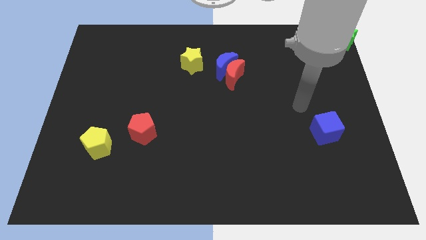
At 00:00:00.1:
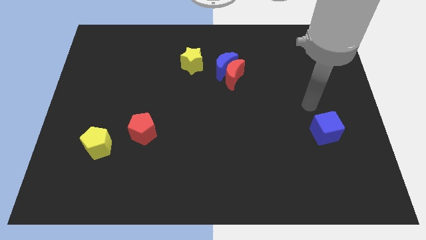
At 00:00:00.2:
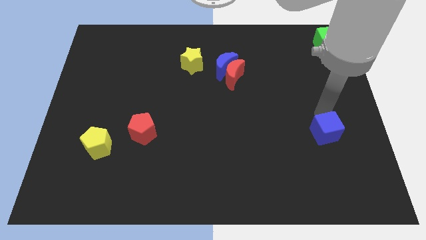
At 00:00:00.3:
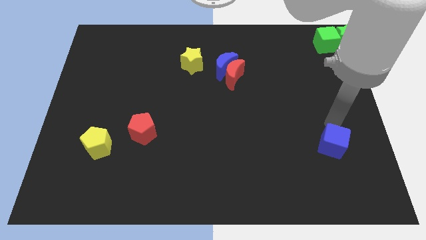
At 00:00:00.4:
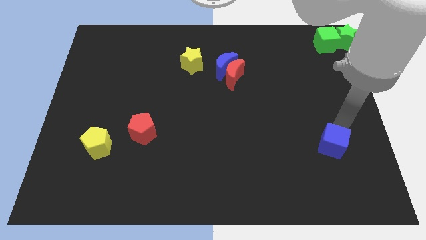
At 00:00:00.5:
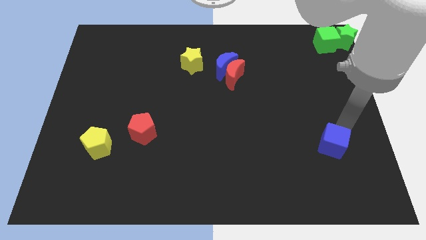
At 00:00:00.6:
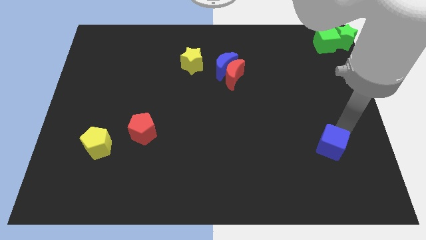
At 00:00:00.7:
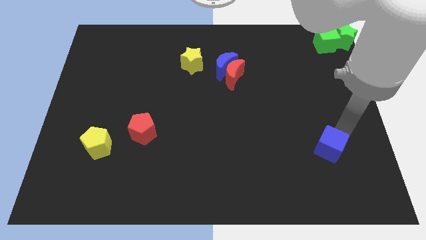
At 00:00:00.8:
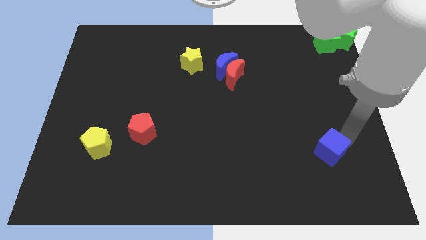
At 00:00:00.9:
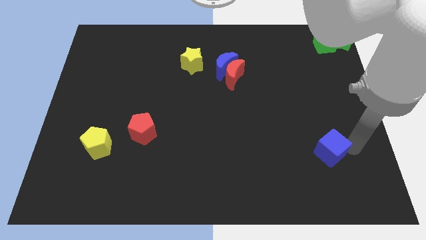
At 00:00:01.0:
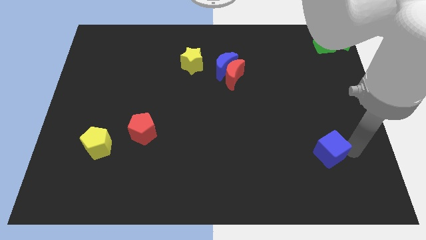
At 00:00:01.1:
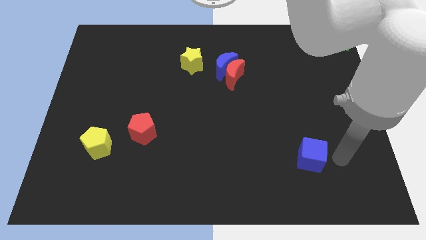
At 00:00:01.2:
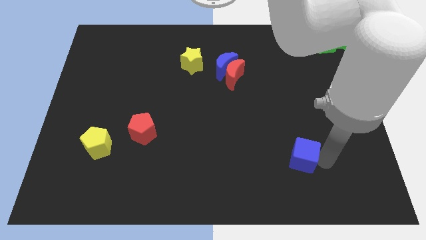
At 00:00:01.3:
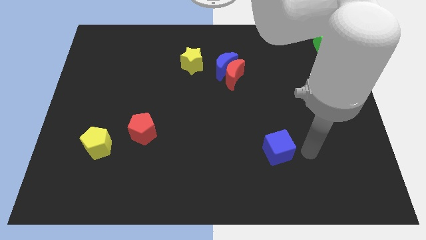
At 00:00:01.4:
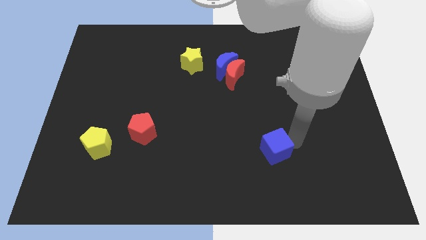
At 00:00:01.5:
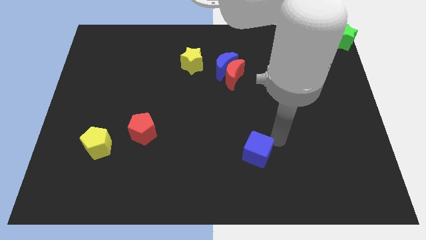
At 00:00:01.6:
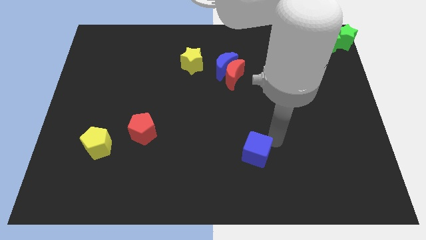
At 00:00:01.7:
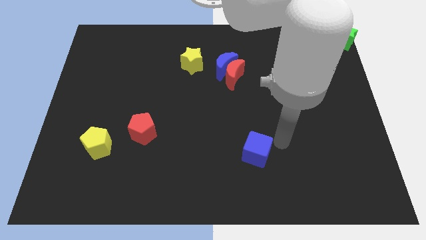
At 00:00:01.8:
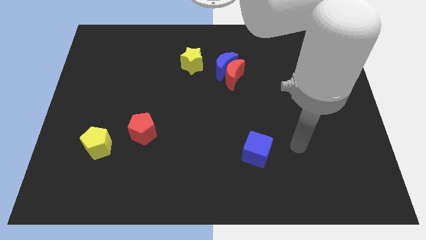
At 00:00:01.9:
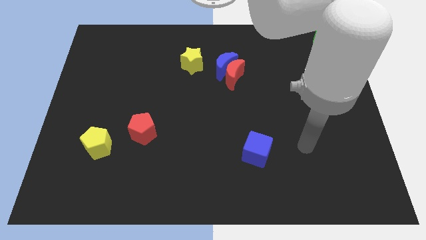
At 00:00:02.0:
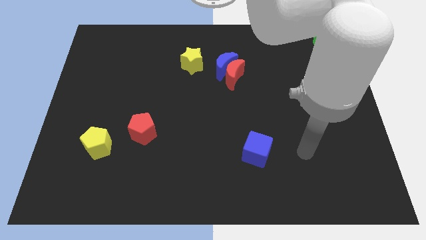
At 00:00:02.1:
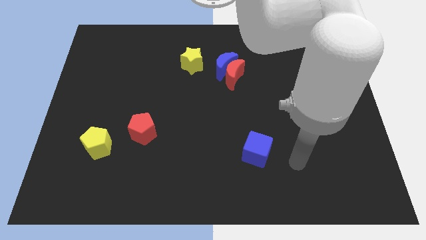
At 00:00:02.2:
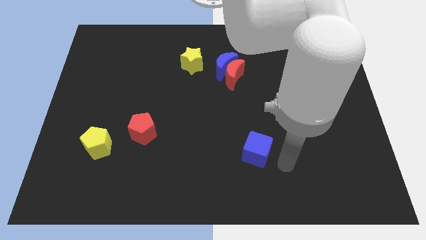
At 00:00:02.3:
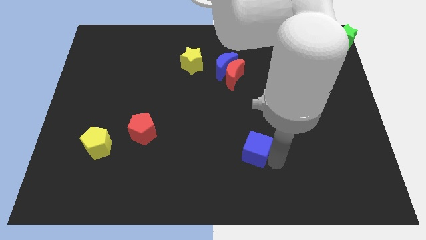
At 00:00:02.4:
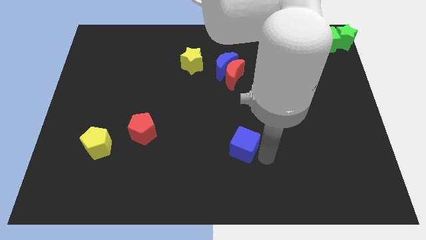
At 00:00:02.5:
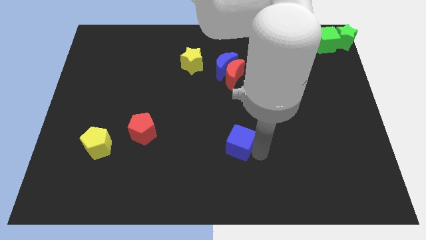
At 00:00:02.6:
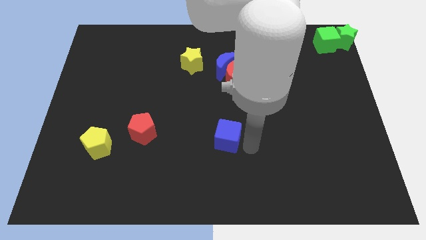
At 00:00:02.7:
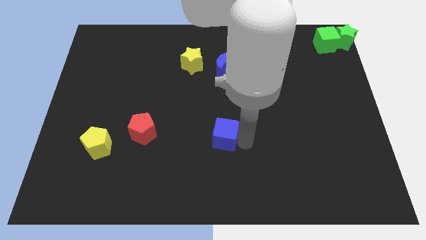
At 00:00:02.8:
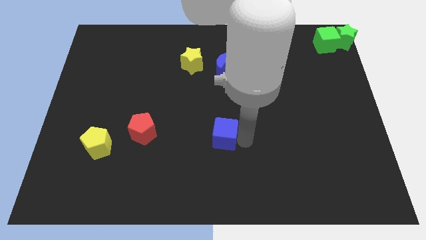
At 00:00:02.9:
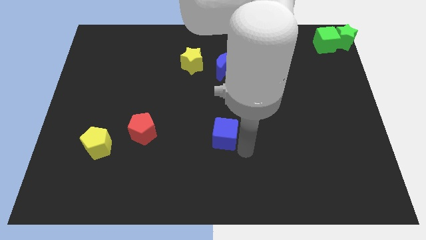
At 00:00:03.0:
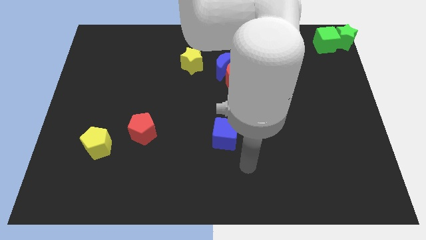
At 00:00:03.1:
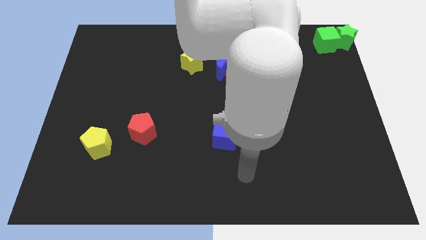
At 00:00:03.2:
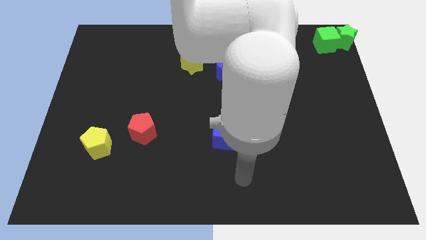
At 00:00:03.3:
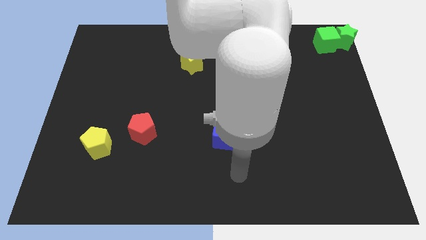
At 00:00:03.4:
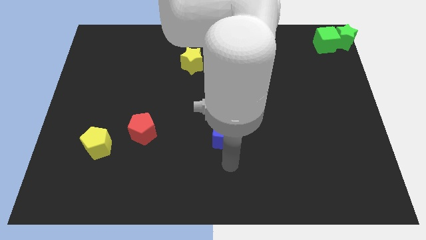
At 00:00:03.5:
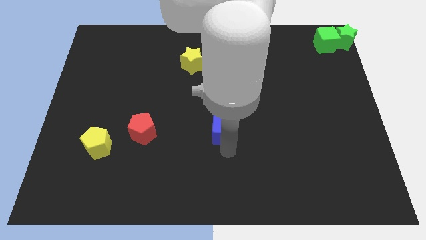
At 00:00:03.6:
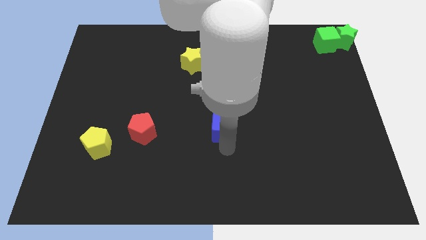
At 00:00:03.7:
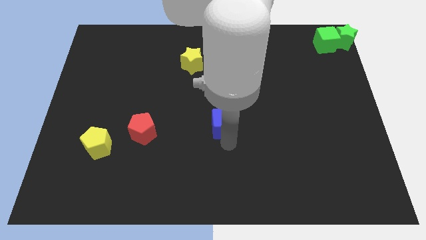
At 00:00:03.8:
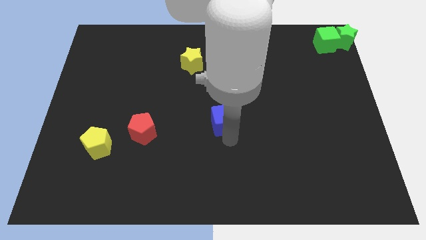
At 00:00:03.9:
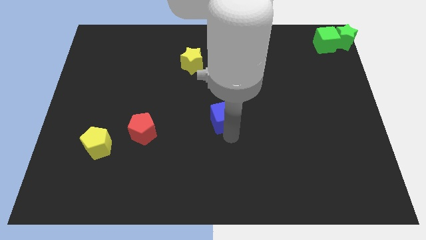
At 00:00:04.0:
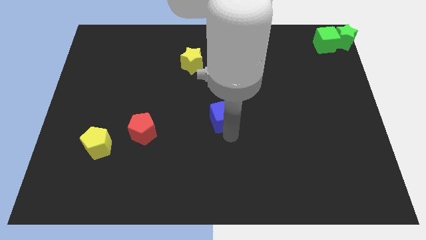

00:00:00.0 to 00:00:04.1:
place the blue cube at center of the board

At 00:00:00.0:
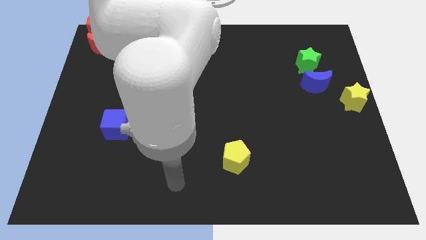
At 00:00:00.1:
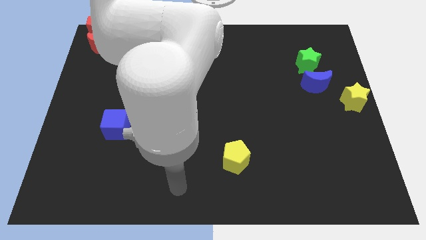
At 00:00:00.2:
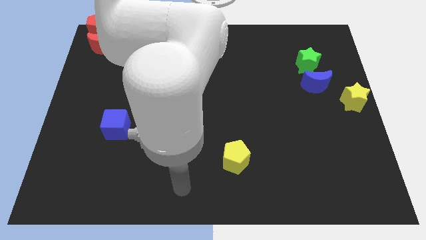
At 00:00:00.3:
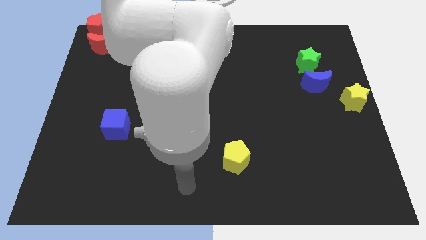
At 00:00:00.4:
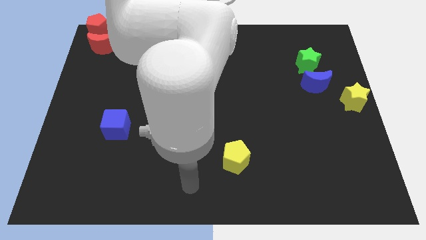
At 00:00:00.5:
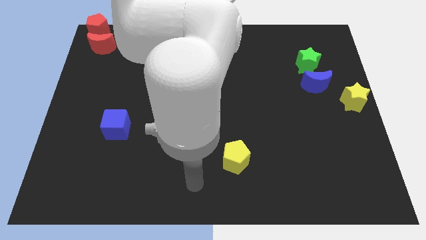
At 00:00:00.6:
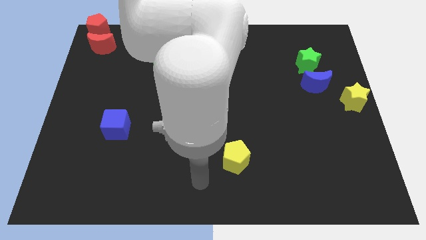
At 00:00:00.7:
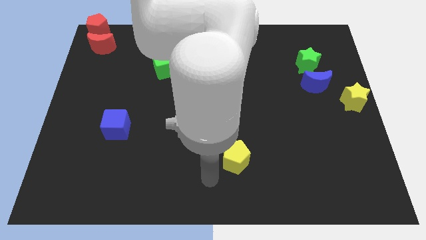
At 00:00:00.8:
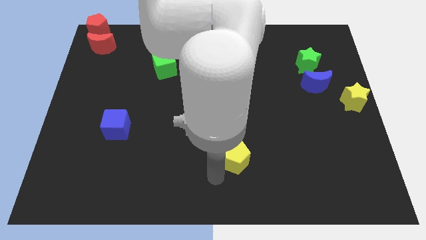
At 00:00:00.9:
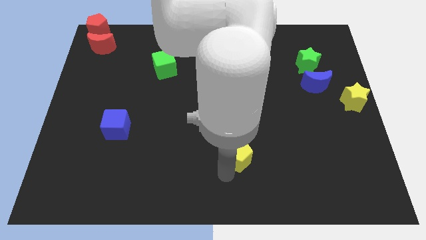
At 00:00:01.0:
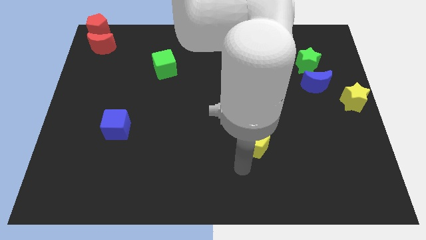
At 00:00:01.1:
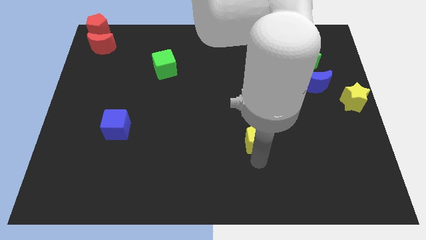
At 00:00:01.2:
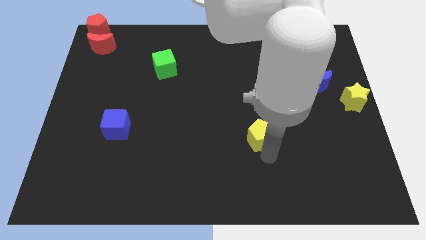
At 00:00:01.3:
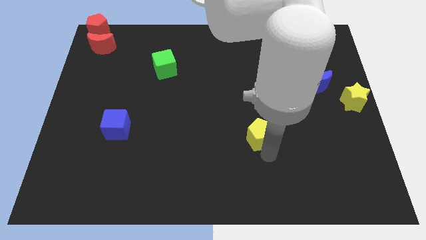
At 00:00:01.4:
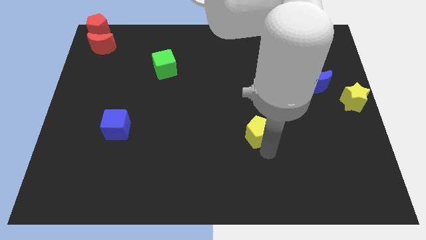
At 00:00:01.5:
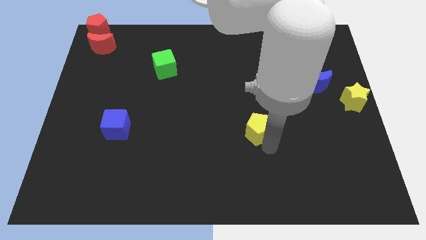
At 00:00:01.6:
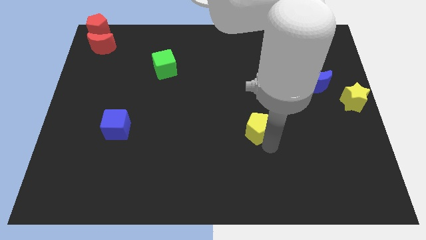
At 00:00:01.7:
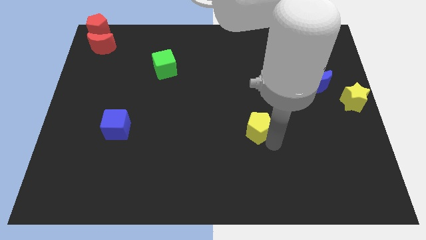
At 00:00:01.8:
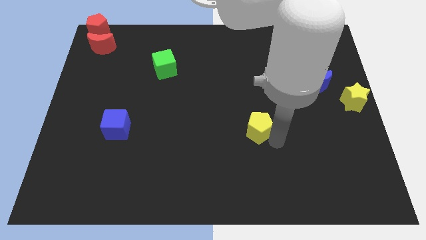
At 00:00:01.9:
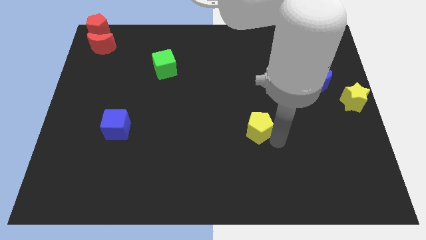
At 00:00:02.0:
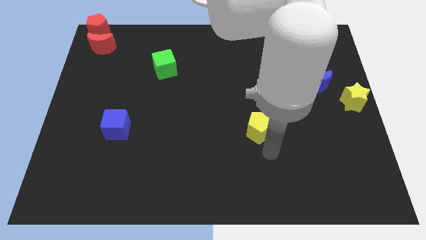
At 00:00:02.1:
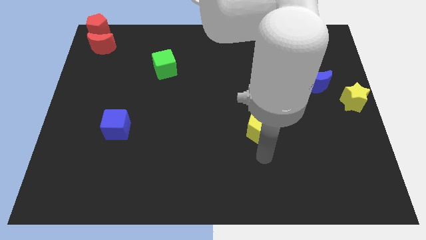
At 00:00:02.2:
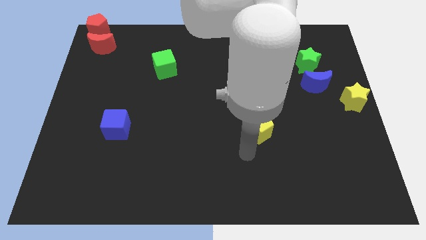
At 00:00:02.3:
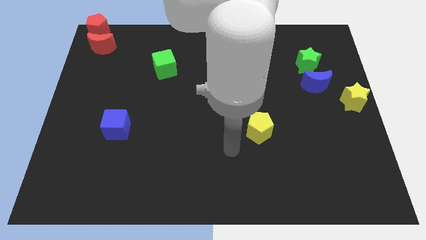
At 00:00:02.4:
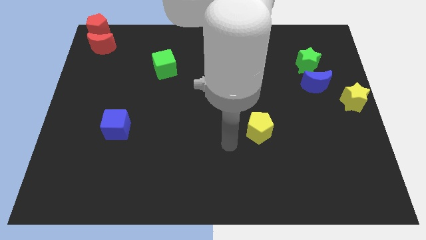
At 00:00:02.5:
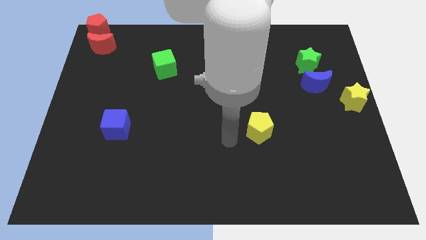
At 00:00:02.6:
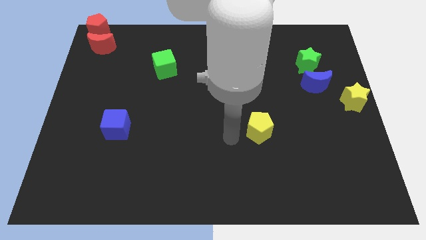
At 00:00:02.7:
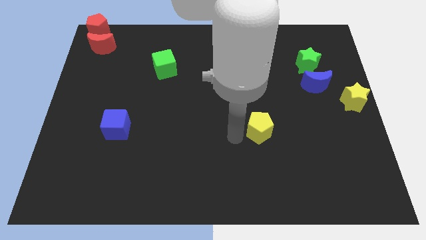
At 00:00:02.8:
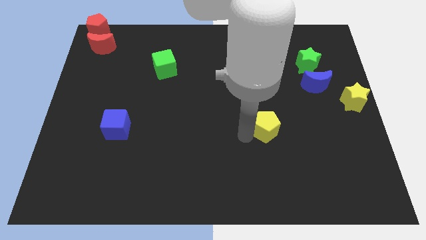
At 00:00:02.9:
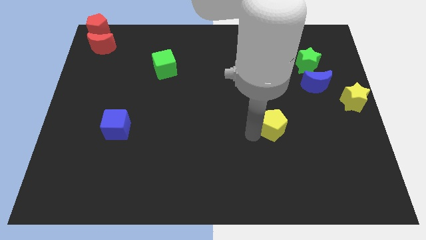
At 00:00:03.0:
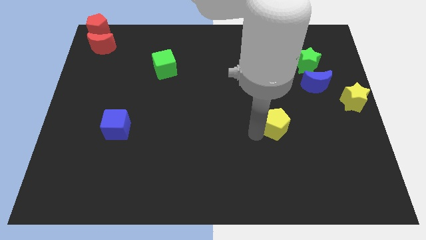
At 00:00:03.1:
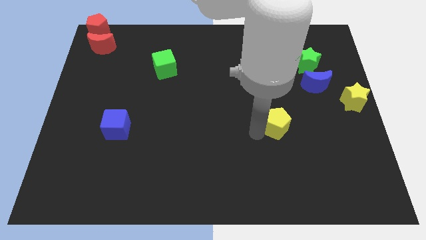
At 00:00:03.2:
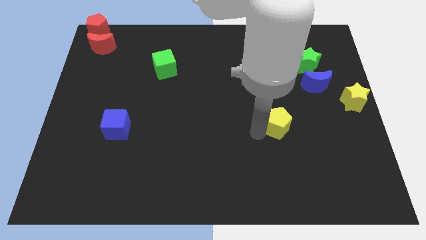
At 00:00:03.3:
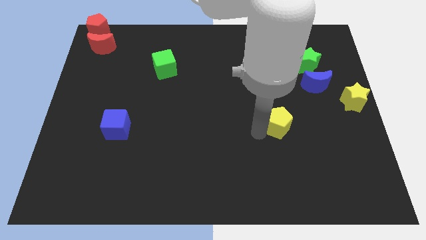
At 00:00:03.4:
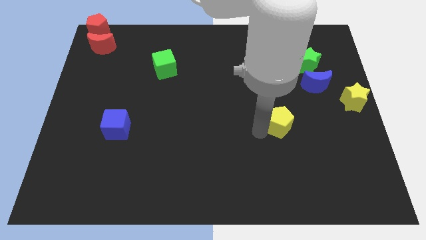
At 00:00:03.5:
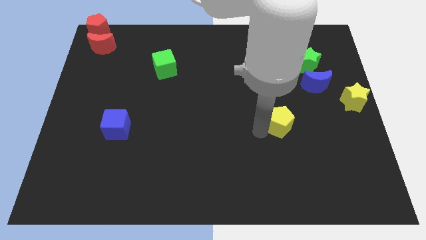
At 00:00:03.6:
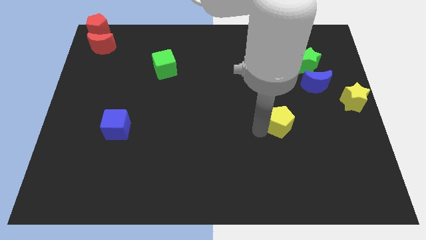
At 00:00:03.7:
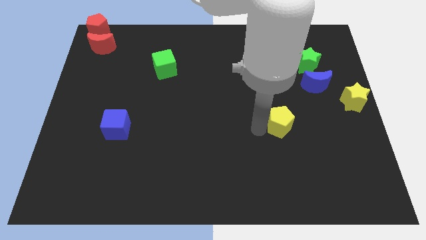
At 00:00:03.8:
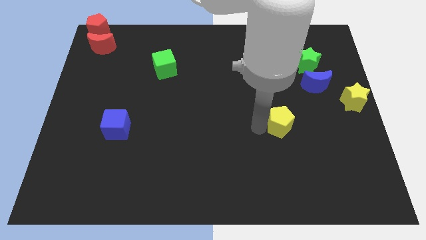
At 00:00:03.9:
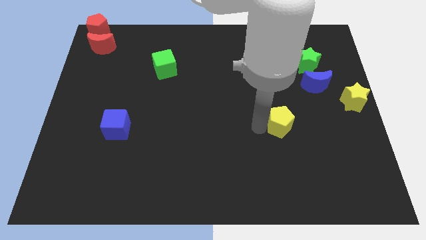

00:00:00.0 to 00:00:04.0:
move yellow pentagon towards the center right

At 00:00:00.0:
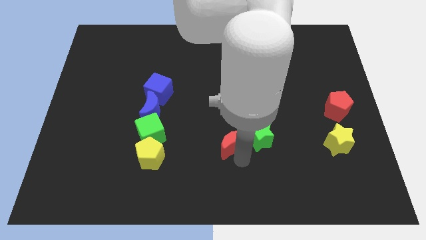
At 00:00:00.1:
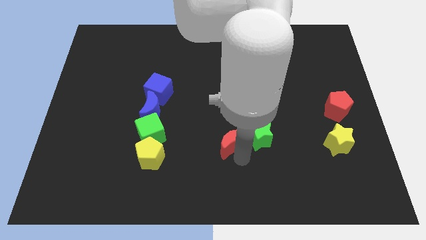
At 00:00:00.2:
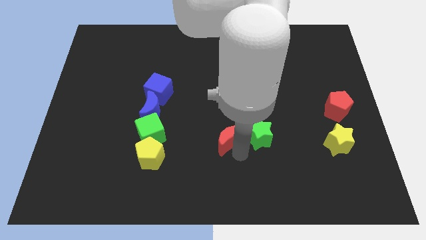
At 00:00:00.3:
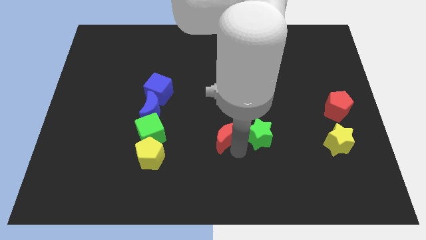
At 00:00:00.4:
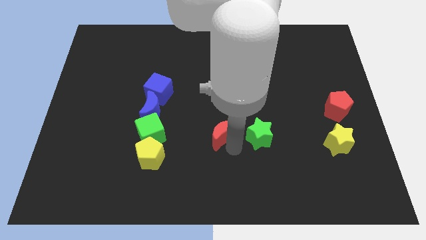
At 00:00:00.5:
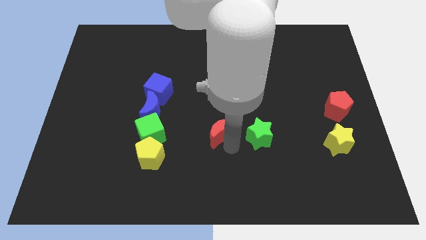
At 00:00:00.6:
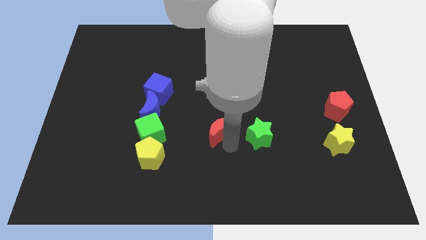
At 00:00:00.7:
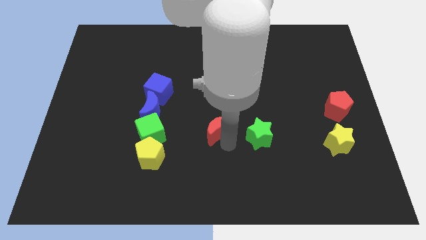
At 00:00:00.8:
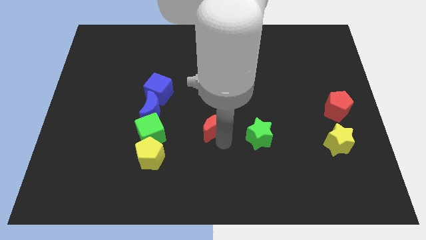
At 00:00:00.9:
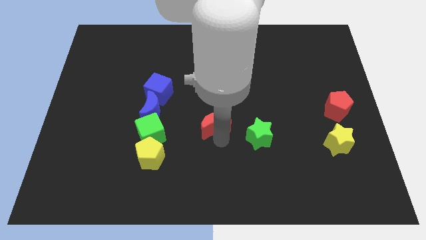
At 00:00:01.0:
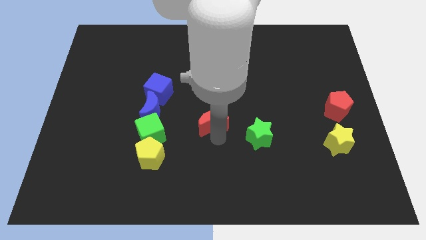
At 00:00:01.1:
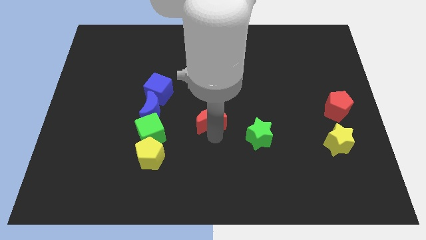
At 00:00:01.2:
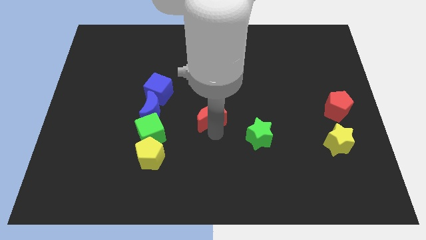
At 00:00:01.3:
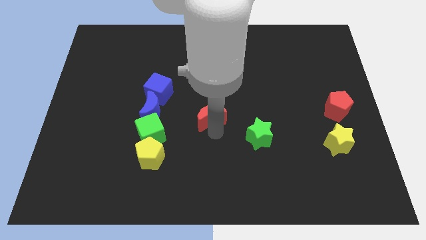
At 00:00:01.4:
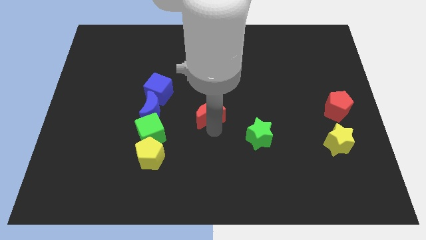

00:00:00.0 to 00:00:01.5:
push the red pentagon towards the center of the board
